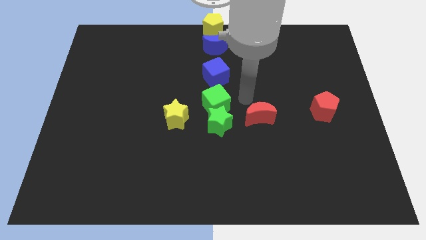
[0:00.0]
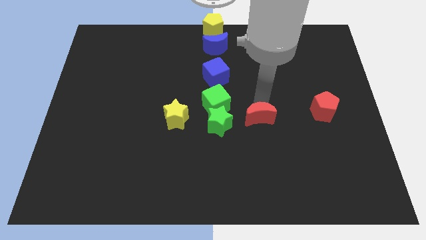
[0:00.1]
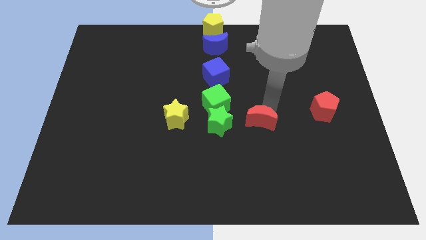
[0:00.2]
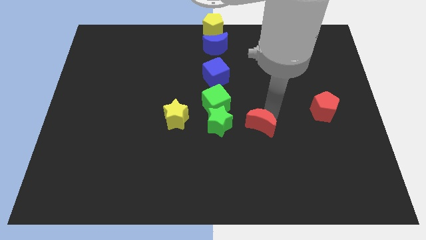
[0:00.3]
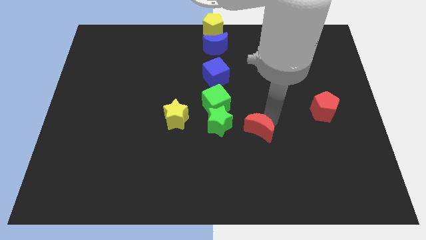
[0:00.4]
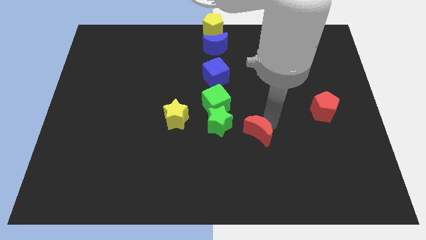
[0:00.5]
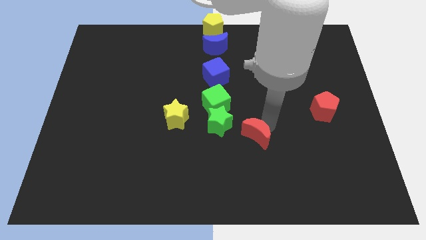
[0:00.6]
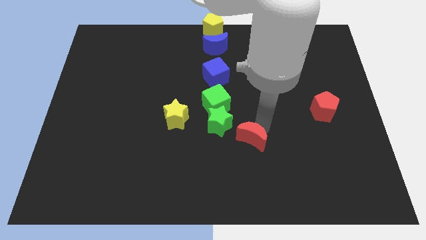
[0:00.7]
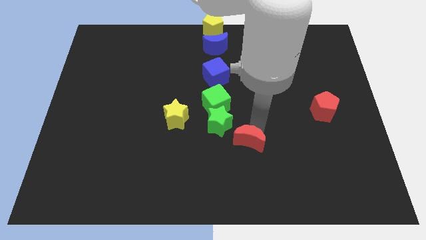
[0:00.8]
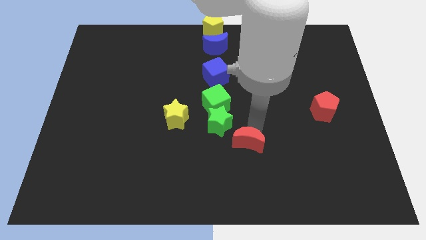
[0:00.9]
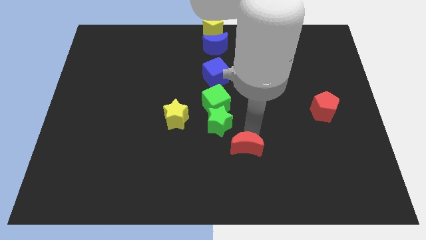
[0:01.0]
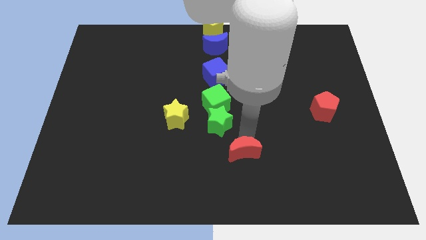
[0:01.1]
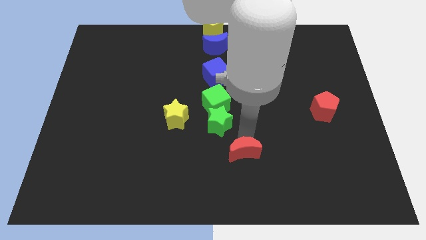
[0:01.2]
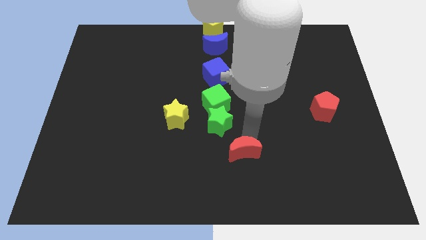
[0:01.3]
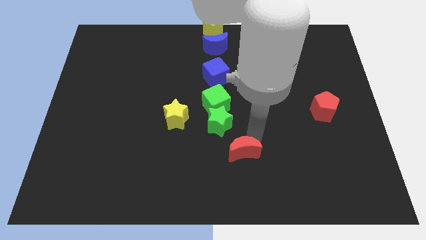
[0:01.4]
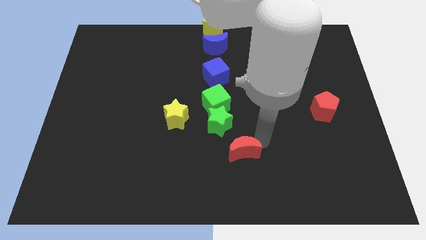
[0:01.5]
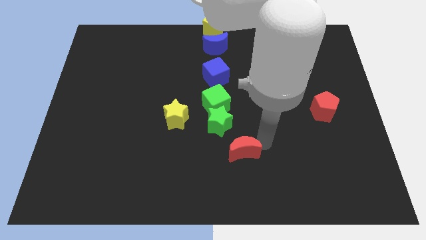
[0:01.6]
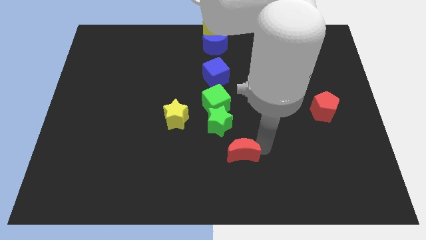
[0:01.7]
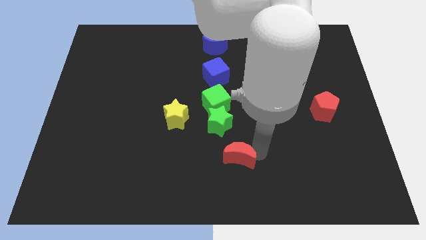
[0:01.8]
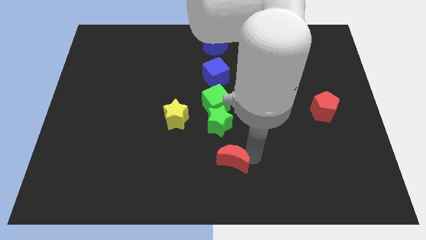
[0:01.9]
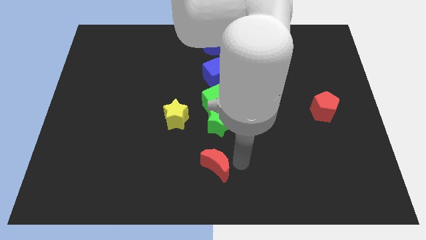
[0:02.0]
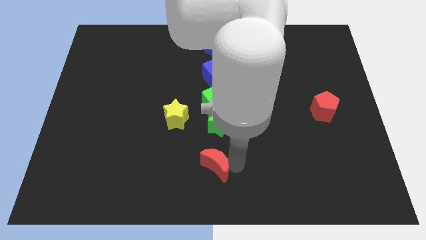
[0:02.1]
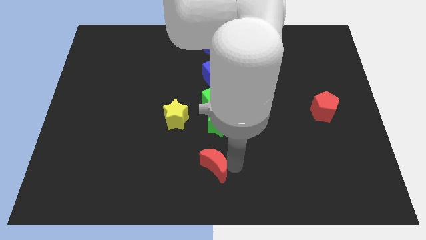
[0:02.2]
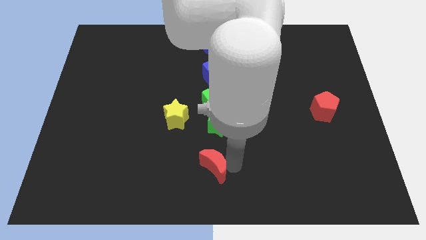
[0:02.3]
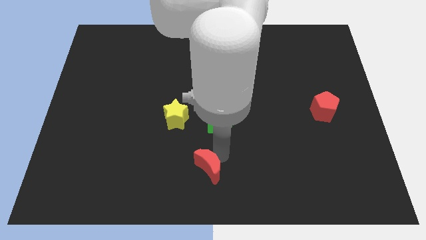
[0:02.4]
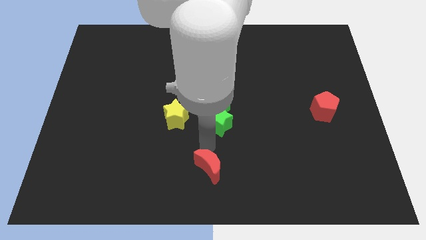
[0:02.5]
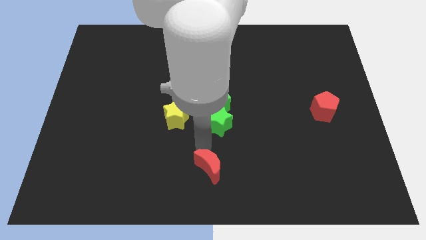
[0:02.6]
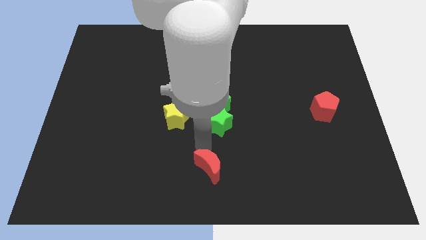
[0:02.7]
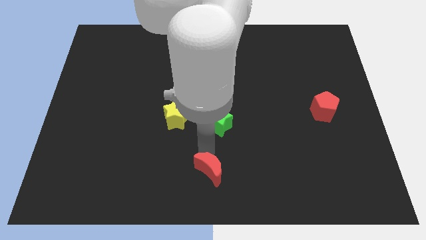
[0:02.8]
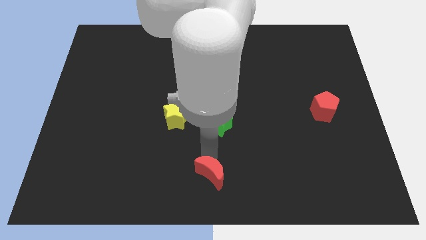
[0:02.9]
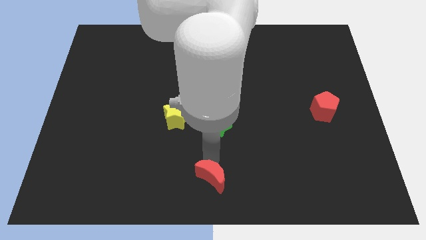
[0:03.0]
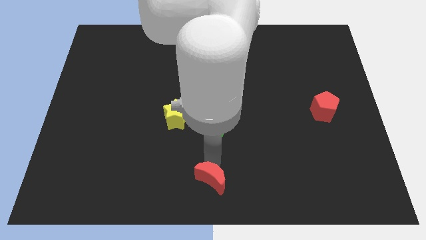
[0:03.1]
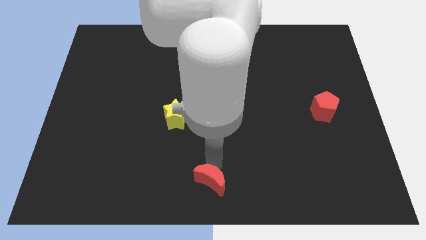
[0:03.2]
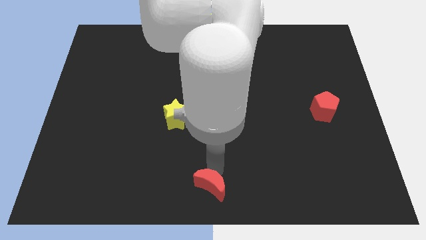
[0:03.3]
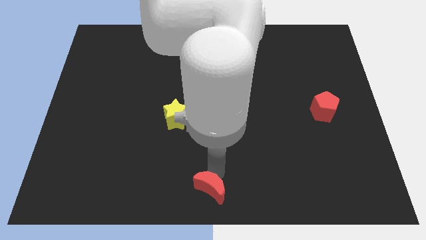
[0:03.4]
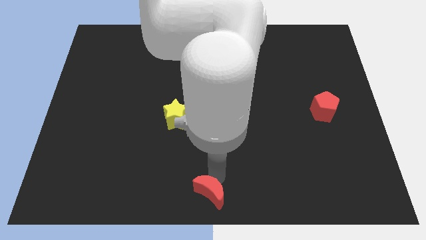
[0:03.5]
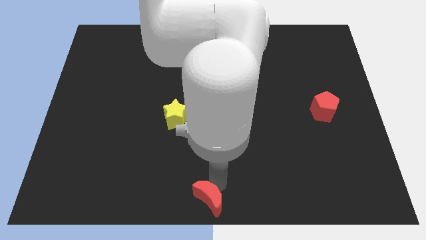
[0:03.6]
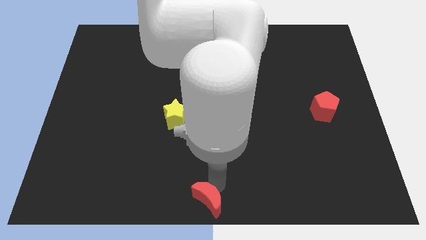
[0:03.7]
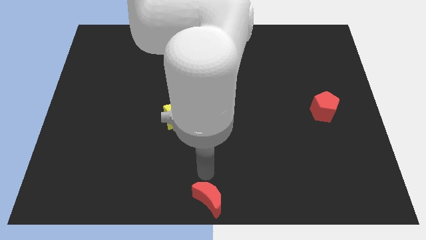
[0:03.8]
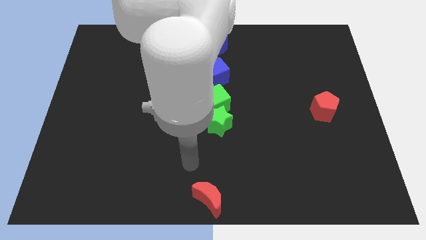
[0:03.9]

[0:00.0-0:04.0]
push the red crescent to the bottom center of the board

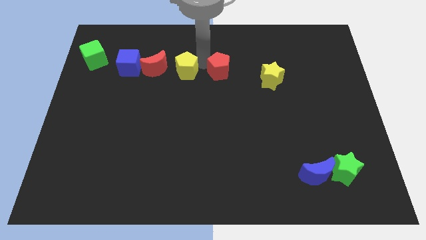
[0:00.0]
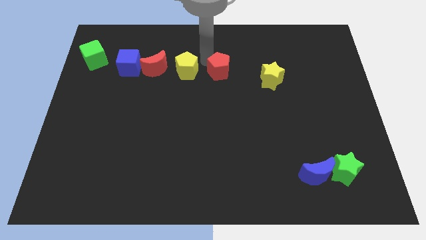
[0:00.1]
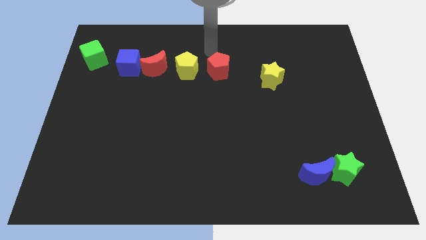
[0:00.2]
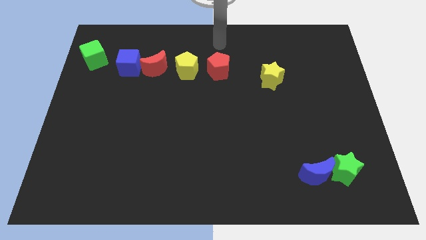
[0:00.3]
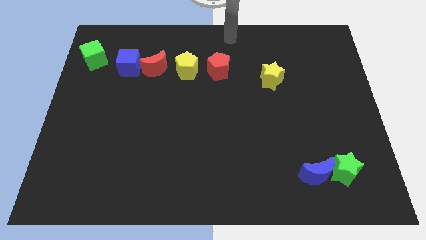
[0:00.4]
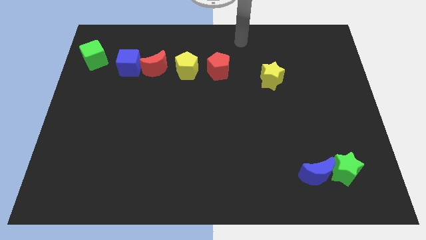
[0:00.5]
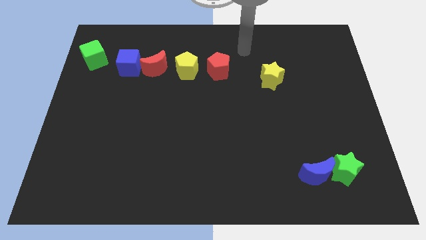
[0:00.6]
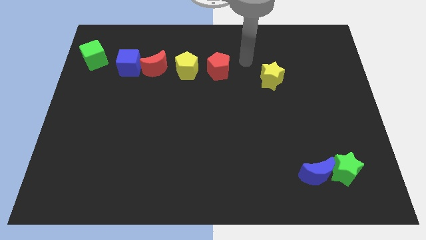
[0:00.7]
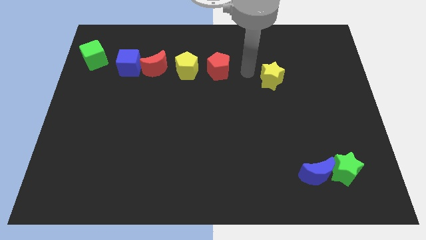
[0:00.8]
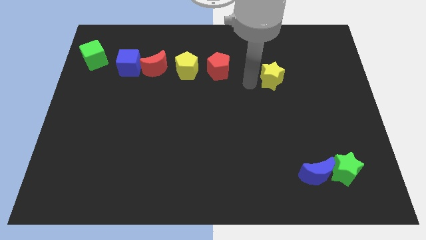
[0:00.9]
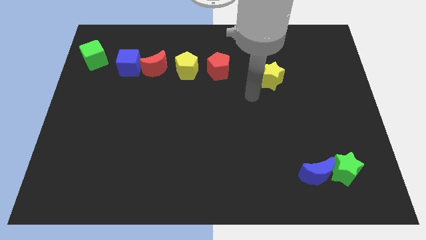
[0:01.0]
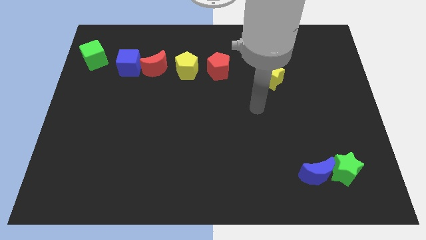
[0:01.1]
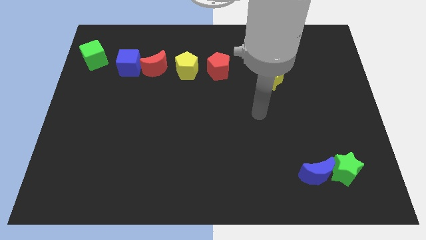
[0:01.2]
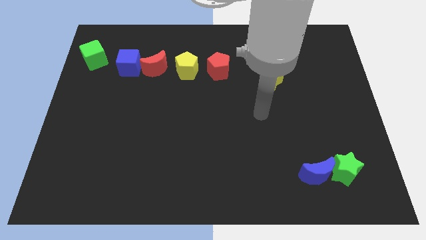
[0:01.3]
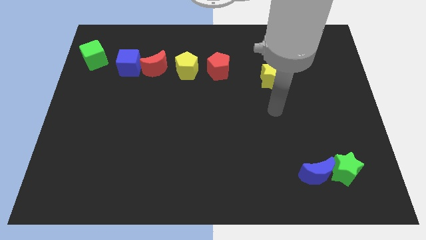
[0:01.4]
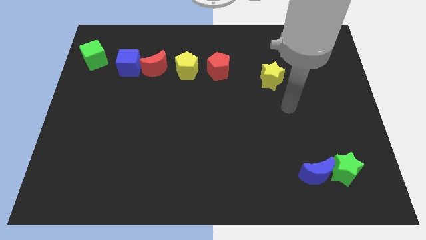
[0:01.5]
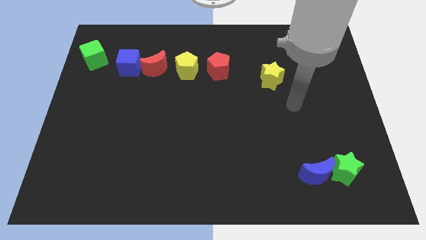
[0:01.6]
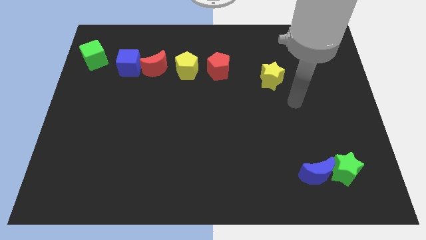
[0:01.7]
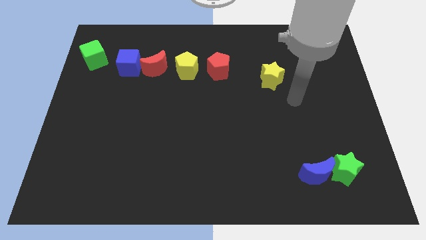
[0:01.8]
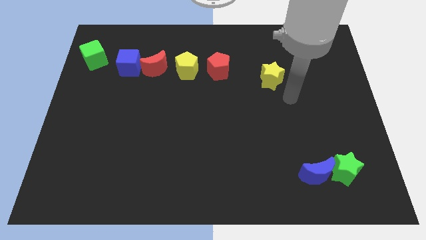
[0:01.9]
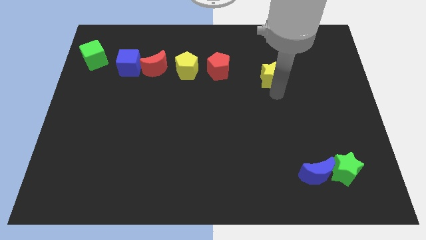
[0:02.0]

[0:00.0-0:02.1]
point your arm at the bottom right side of yellow star

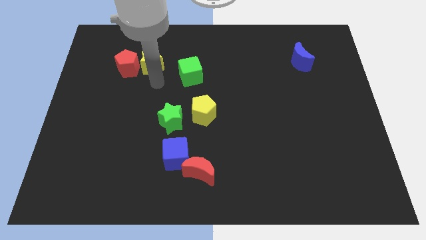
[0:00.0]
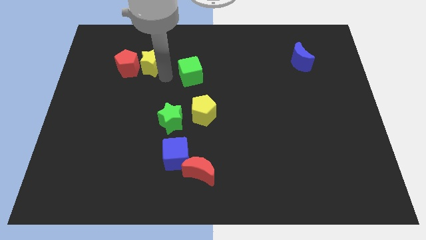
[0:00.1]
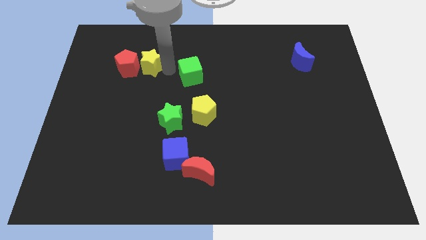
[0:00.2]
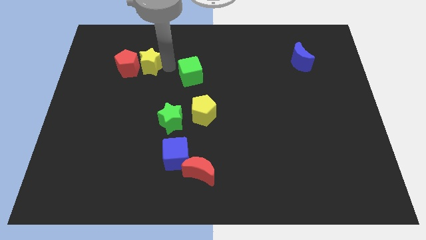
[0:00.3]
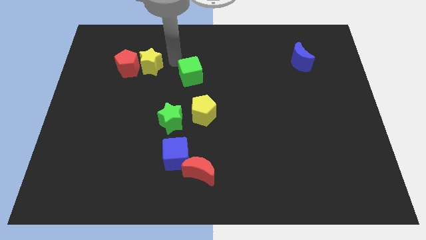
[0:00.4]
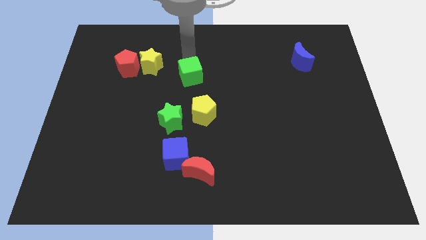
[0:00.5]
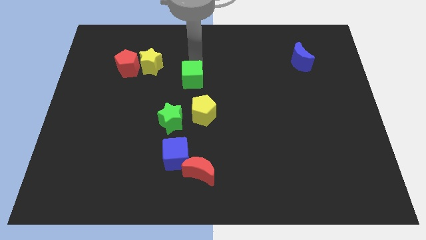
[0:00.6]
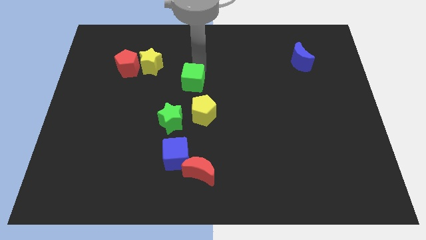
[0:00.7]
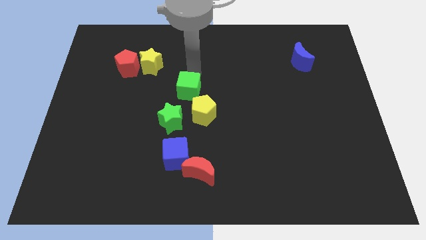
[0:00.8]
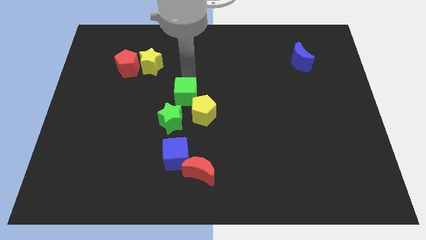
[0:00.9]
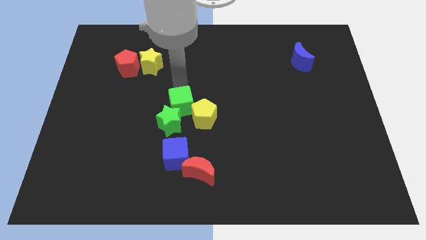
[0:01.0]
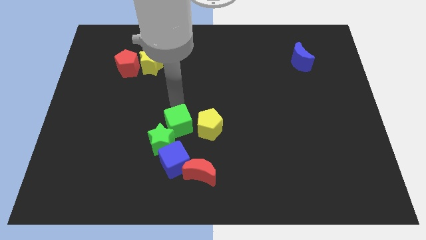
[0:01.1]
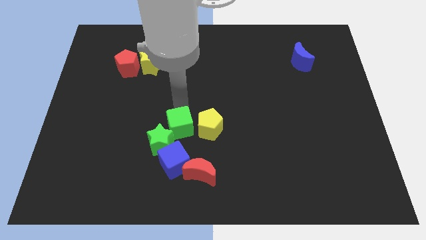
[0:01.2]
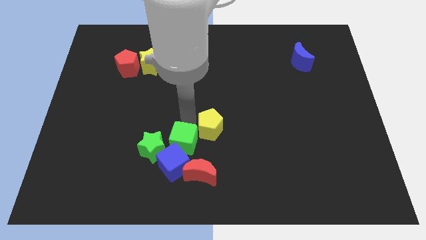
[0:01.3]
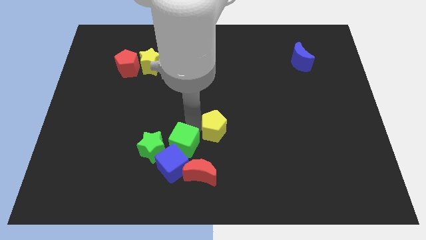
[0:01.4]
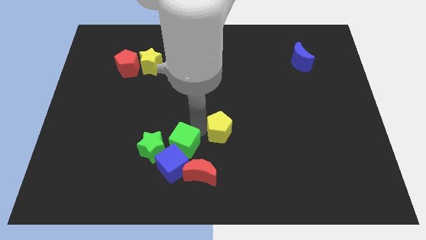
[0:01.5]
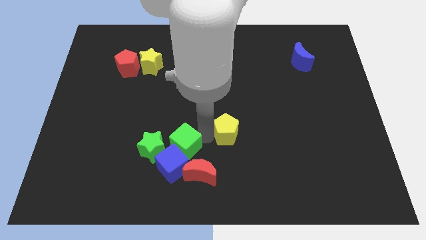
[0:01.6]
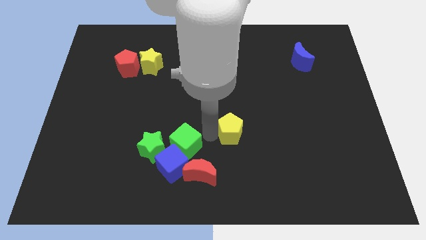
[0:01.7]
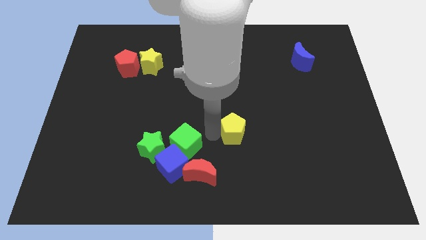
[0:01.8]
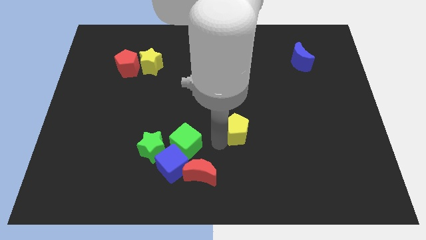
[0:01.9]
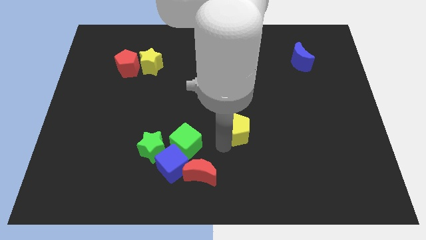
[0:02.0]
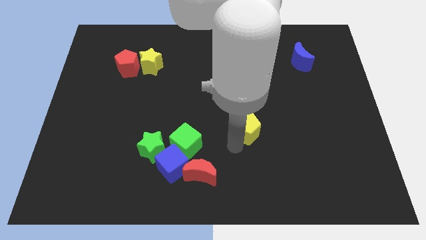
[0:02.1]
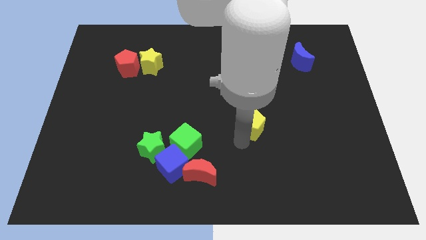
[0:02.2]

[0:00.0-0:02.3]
separate the yellow pentagon from the group of blocks

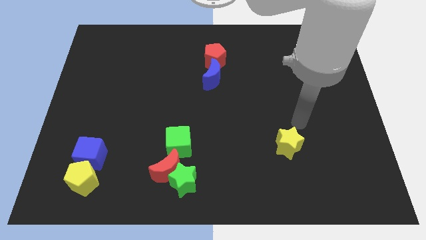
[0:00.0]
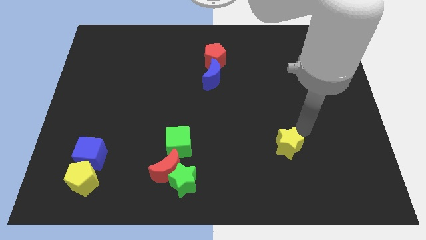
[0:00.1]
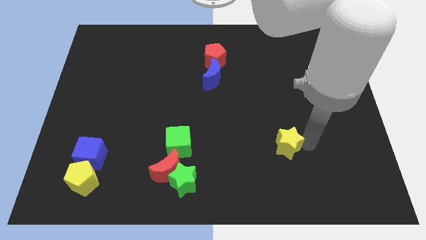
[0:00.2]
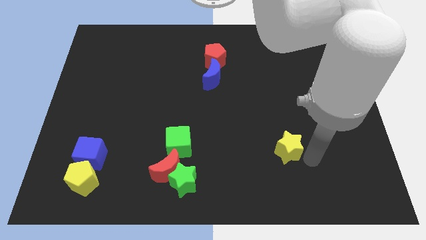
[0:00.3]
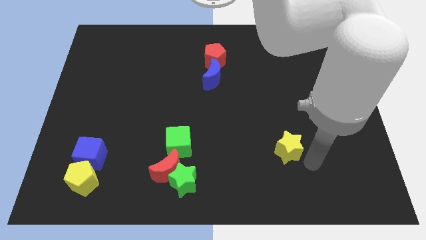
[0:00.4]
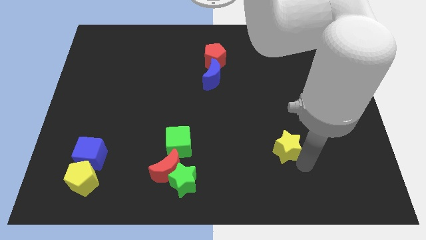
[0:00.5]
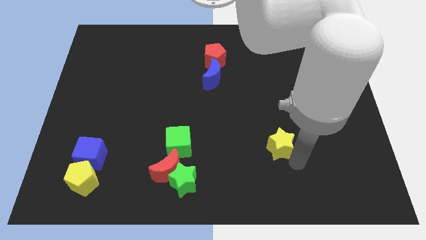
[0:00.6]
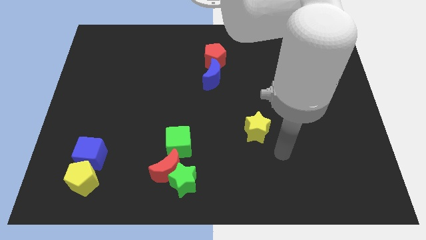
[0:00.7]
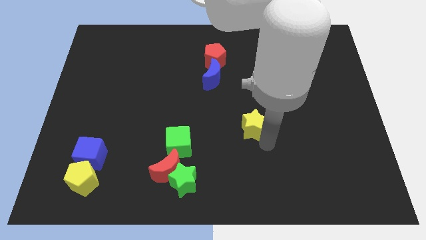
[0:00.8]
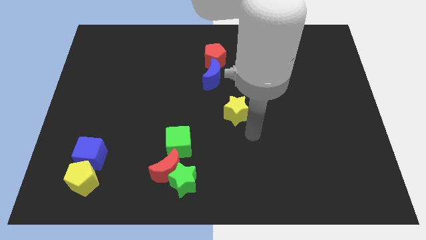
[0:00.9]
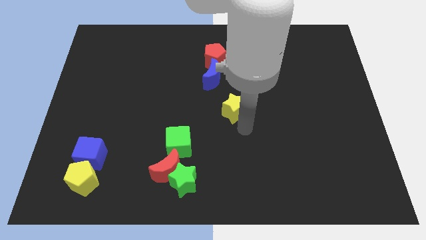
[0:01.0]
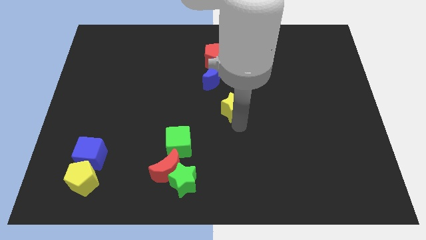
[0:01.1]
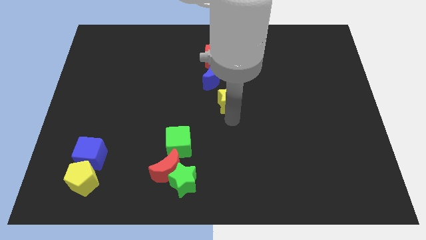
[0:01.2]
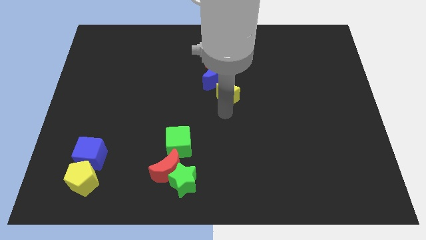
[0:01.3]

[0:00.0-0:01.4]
move yellow star to the center
